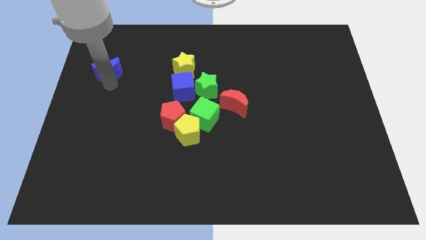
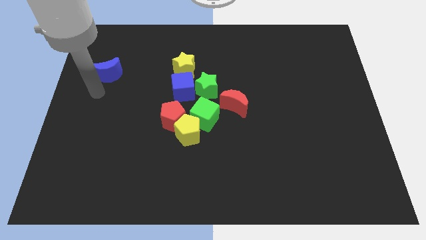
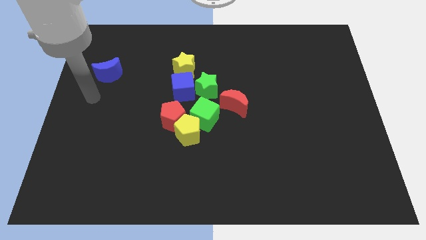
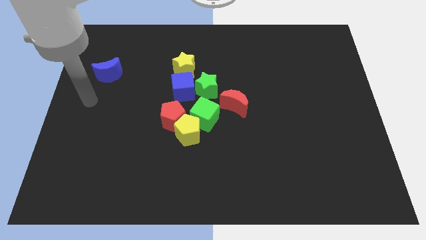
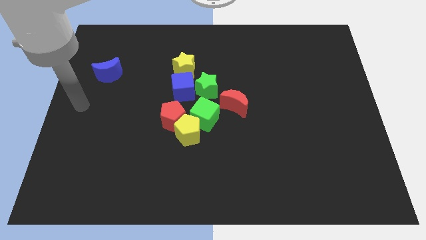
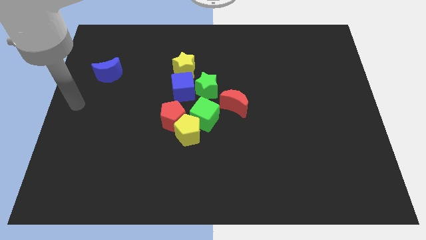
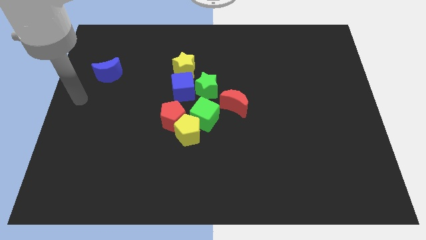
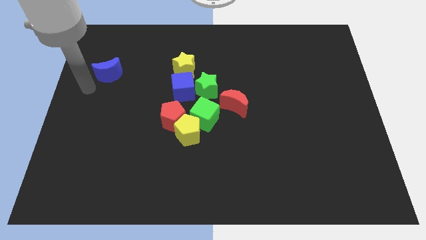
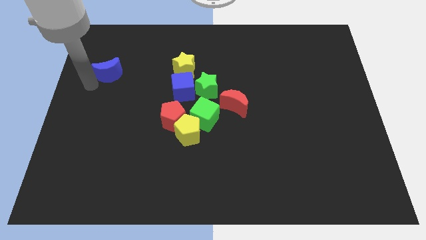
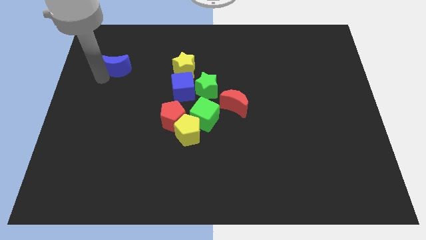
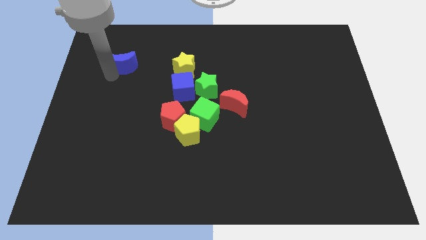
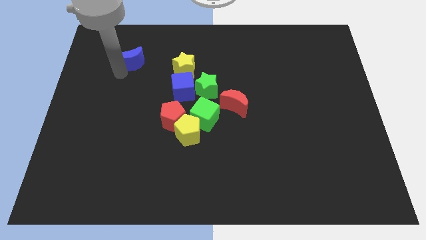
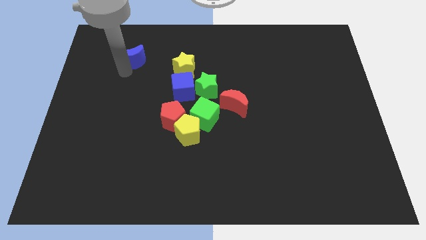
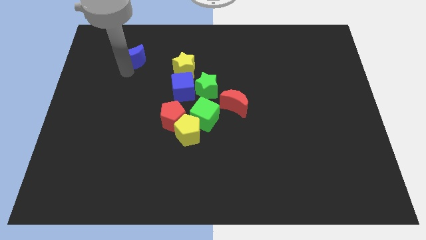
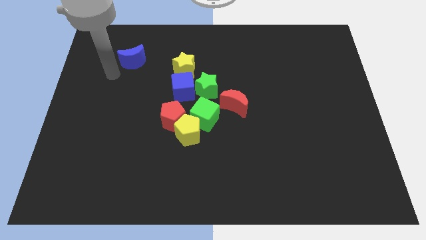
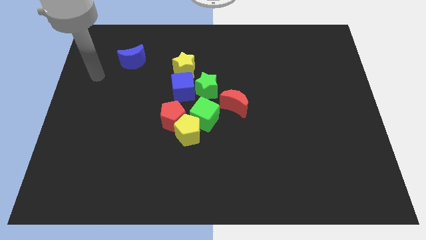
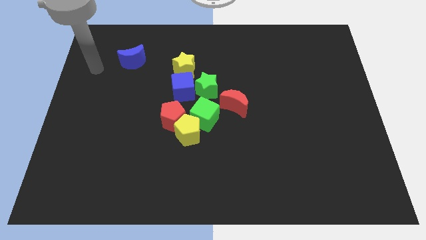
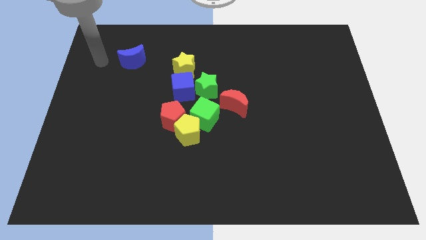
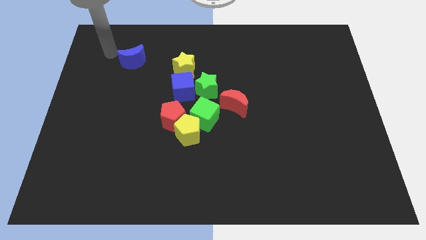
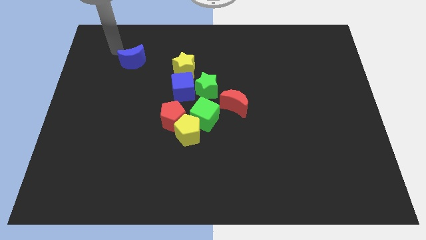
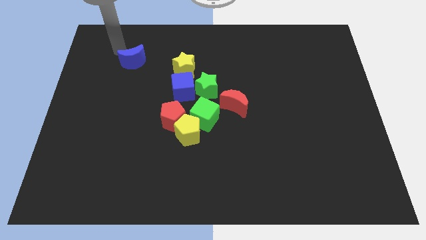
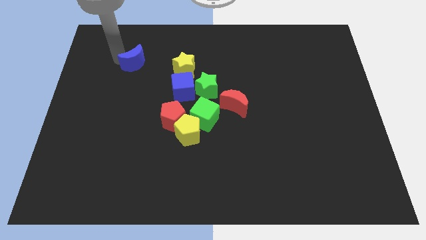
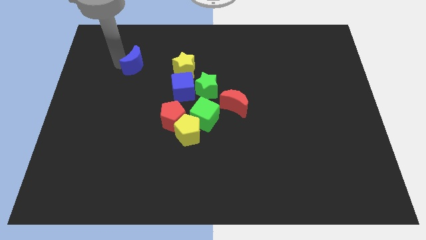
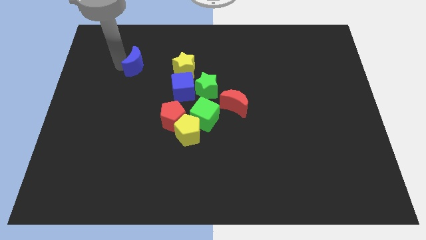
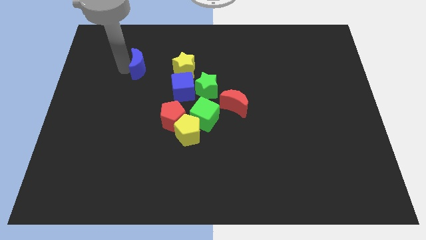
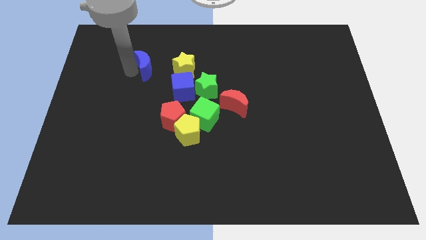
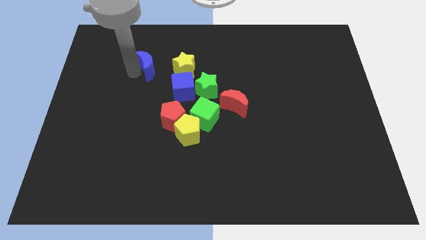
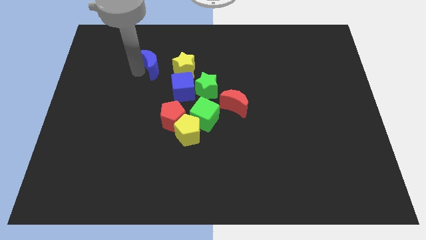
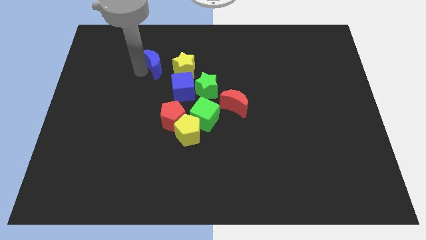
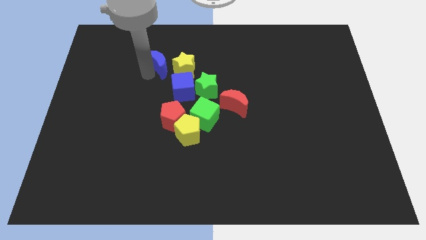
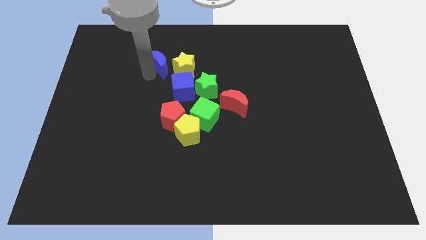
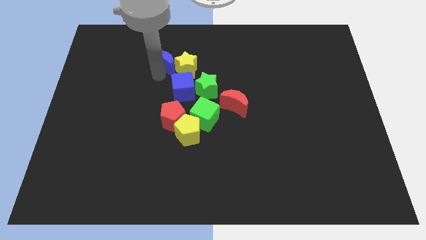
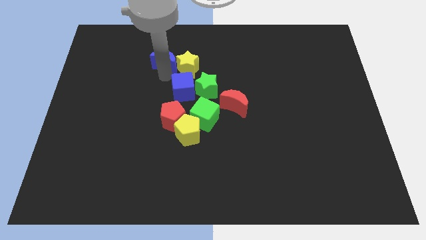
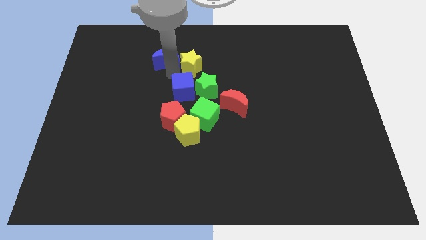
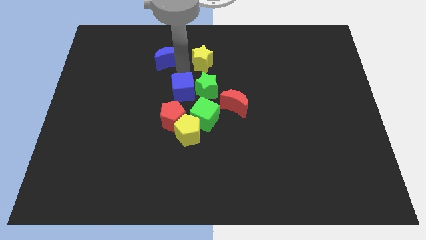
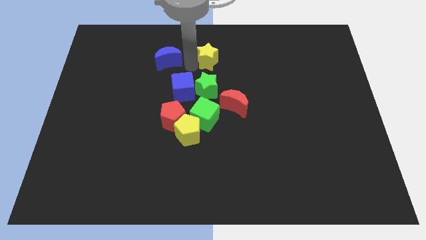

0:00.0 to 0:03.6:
place the blue crescent to the left of the yellow star

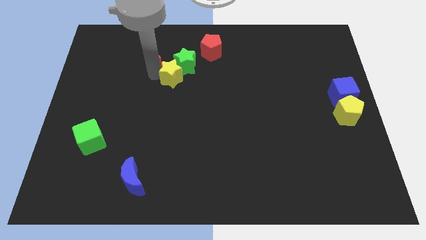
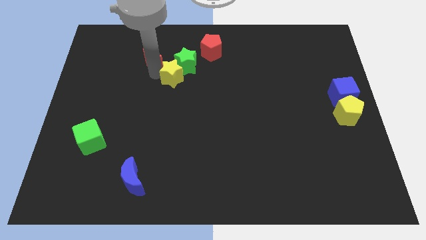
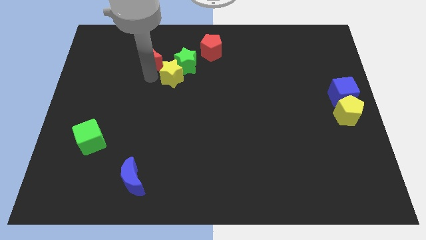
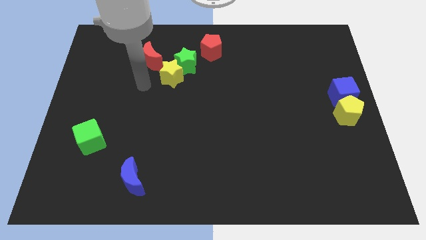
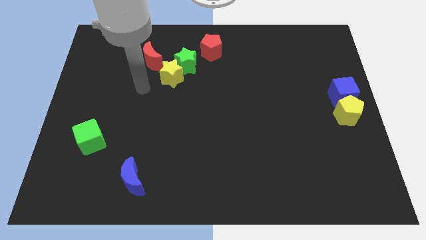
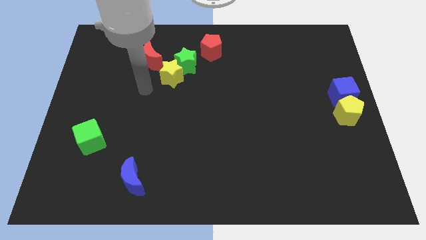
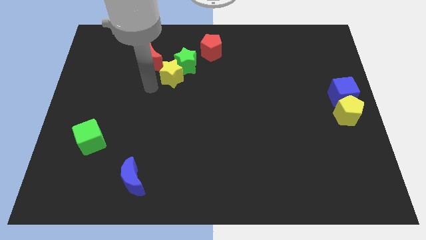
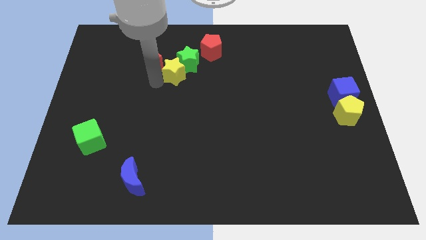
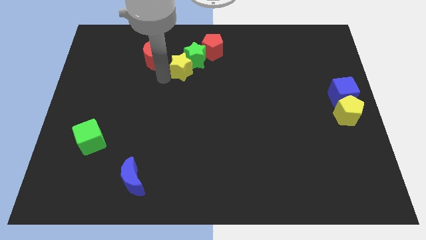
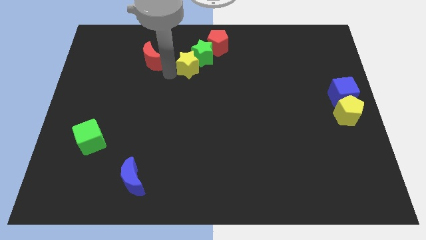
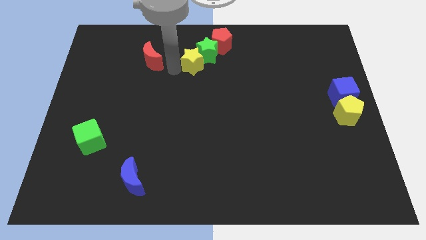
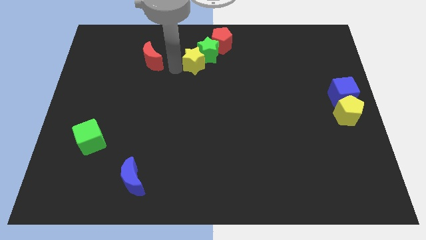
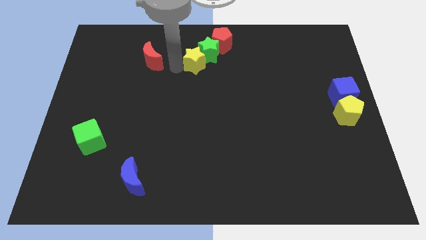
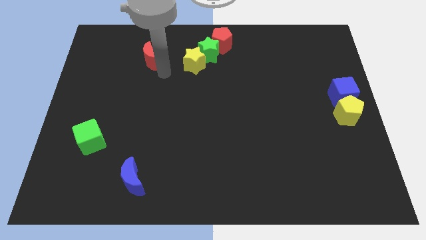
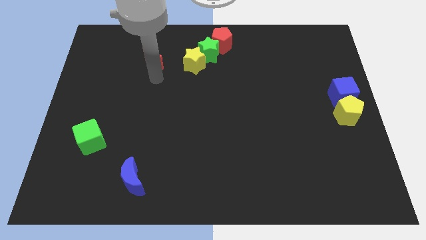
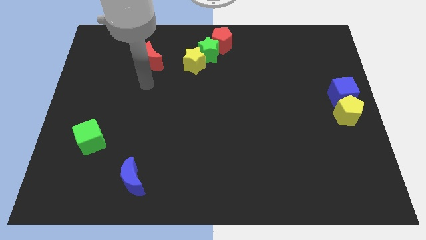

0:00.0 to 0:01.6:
push the yellow star and the green star into the red pentagon

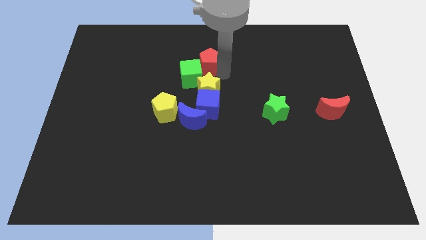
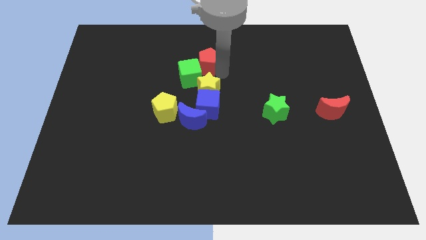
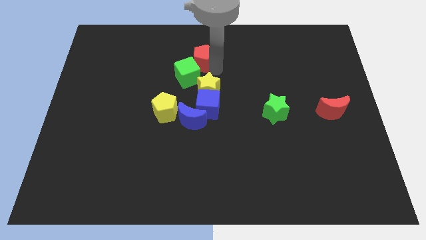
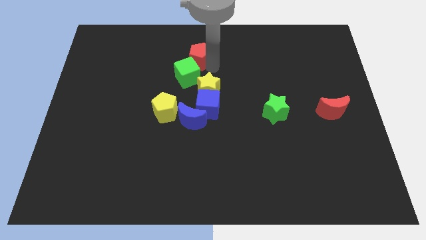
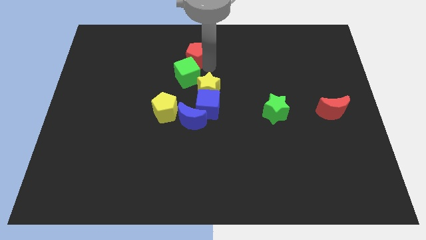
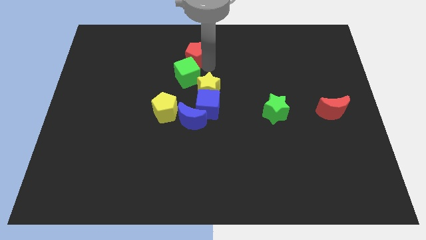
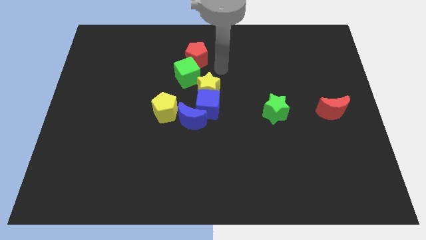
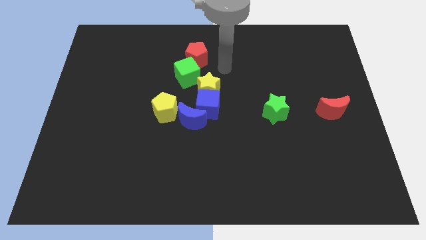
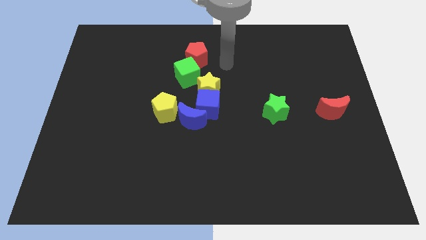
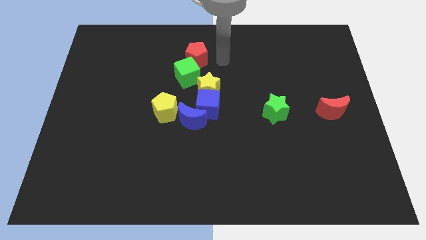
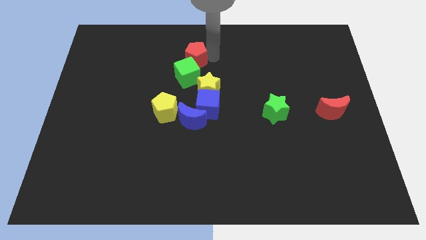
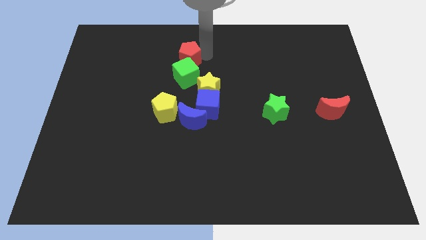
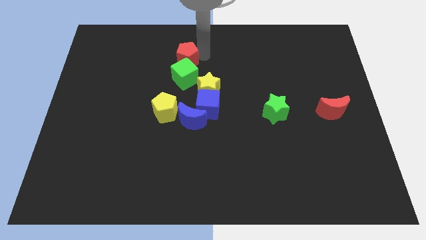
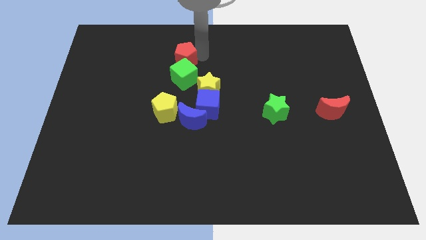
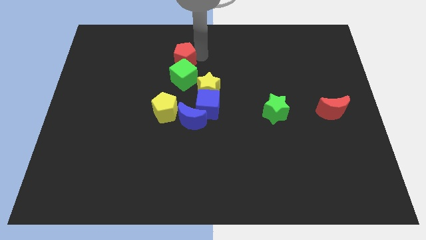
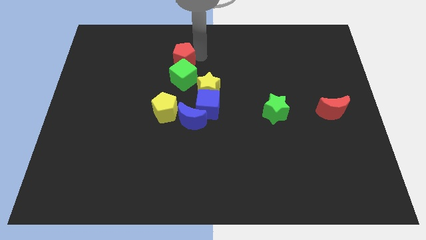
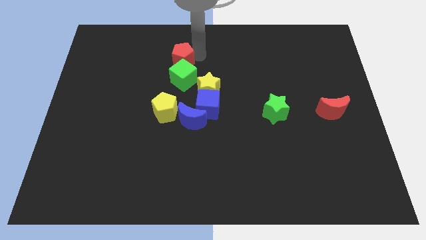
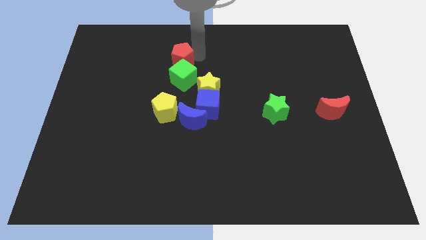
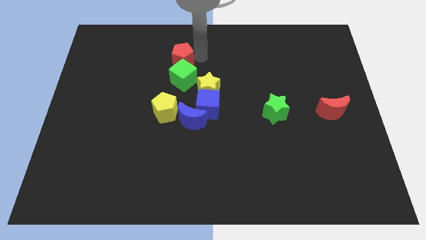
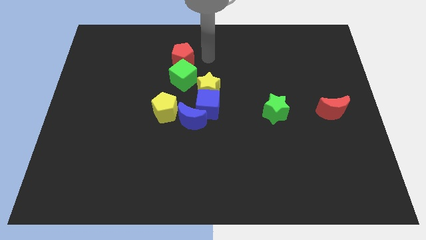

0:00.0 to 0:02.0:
place the red pentagon above the green cube

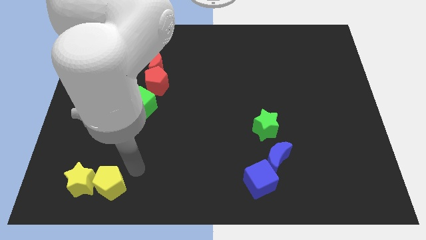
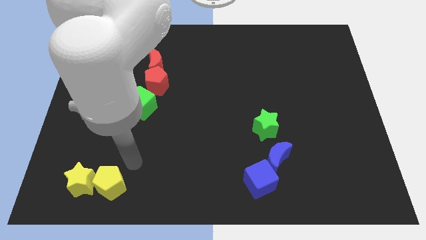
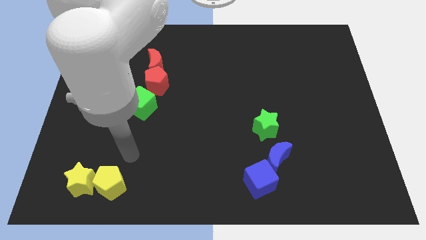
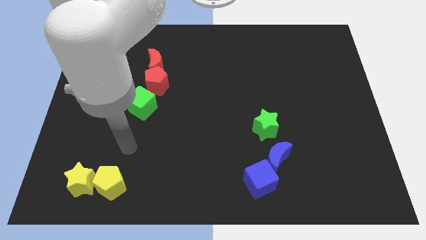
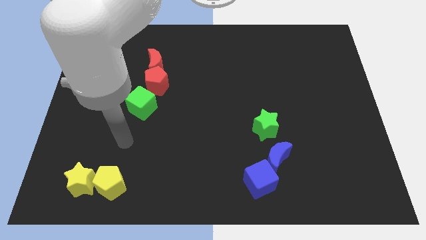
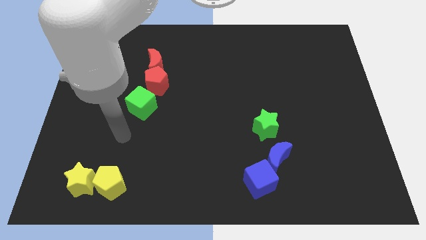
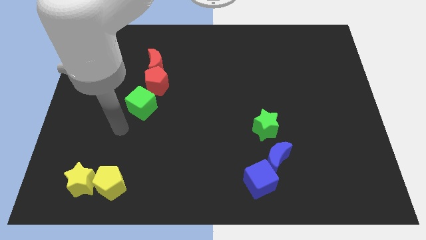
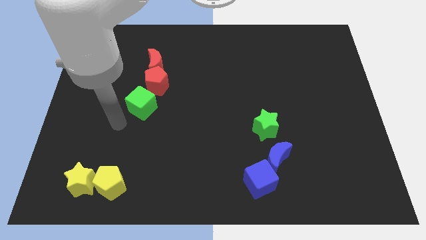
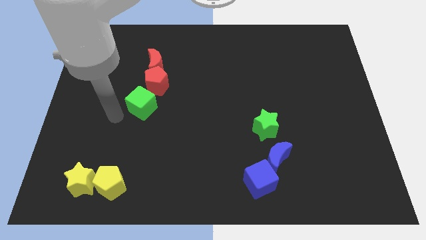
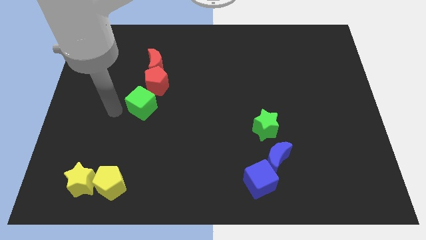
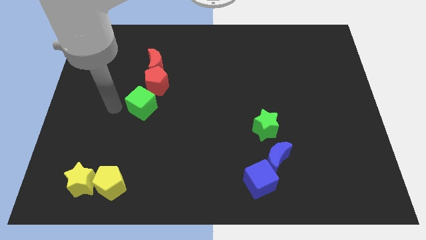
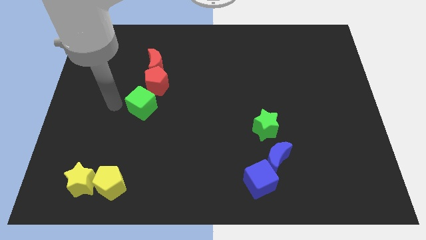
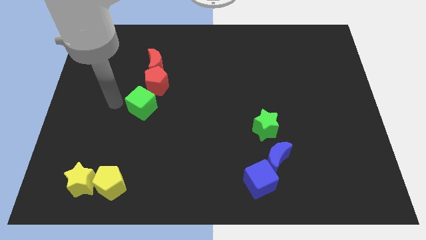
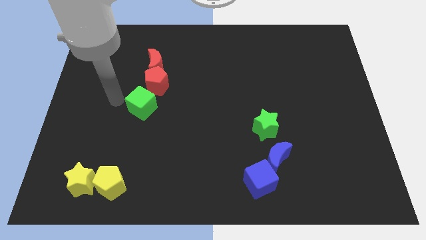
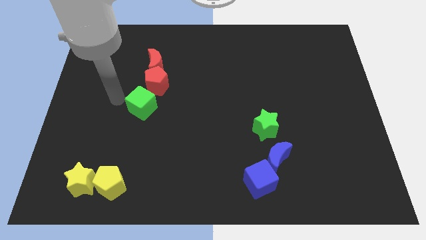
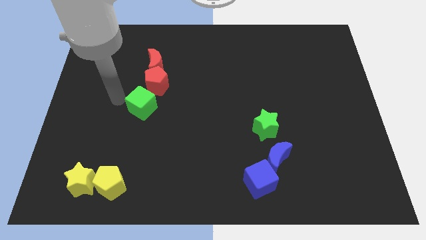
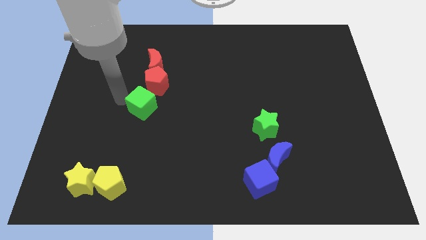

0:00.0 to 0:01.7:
move the arm to top left of the green cube
